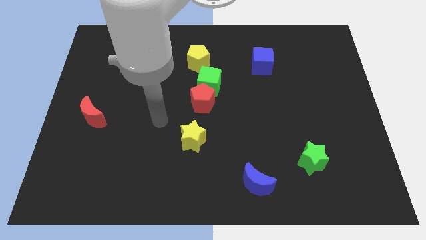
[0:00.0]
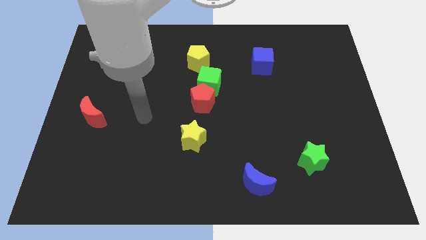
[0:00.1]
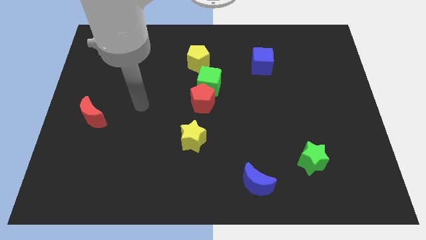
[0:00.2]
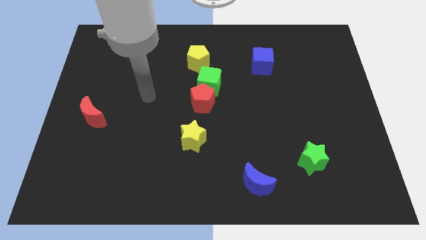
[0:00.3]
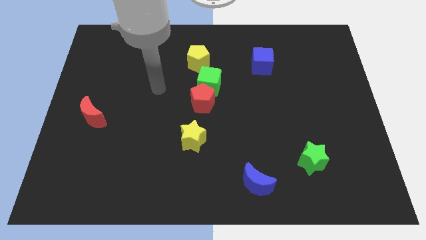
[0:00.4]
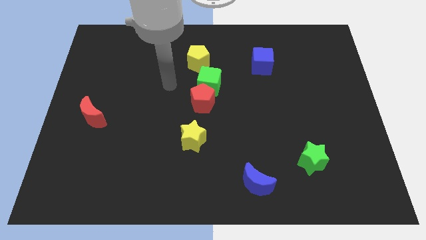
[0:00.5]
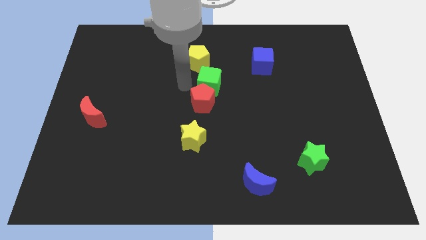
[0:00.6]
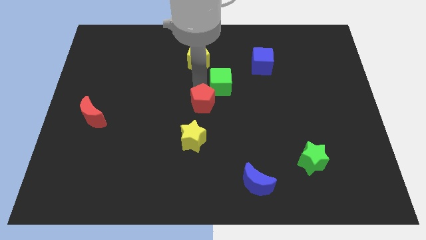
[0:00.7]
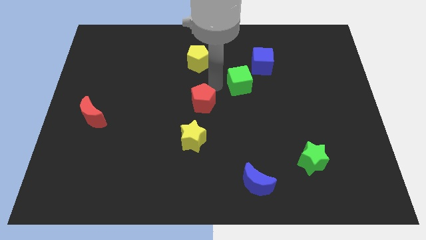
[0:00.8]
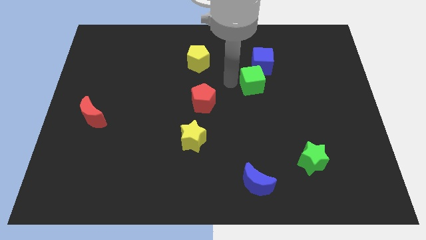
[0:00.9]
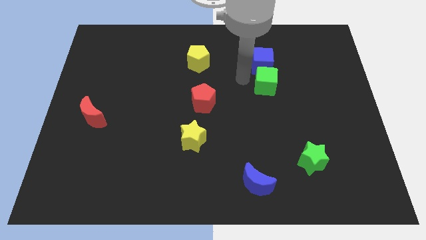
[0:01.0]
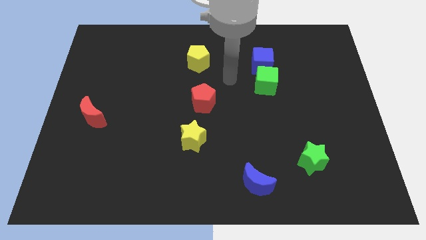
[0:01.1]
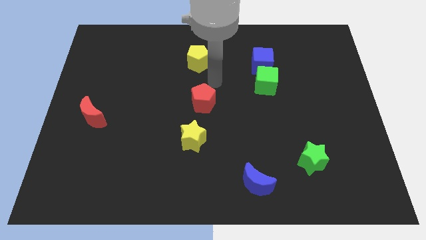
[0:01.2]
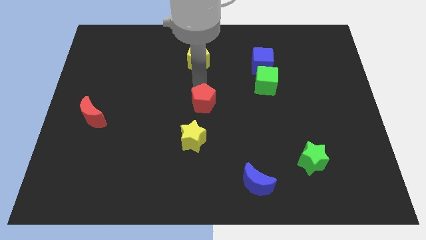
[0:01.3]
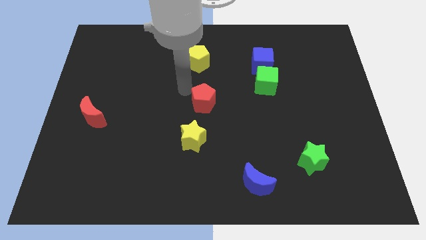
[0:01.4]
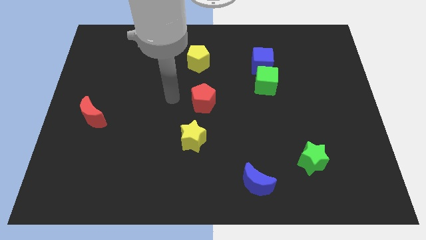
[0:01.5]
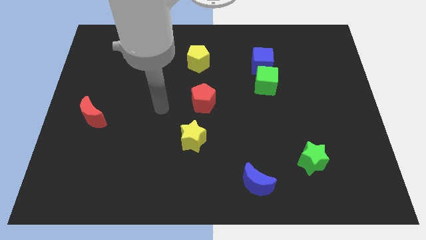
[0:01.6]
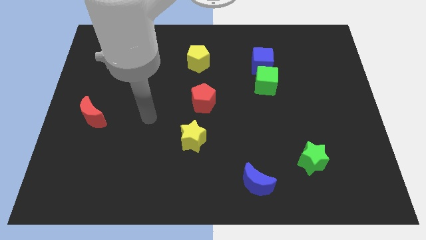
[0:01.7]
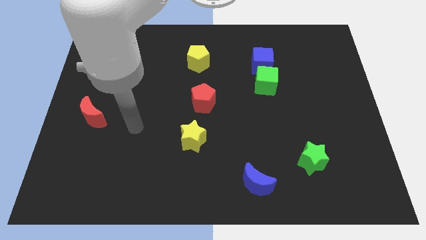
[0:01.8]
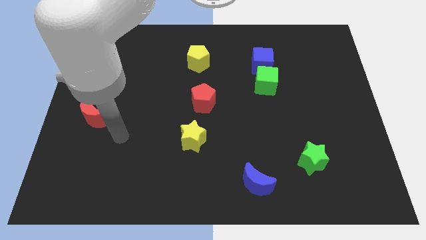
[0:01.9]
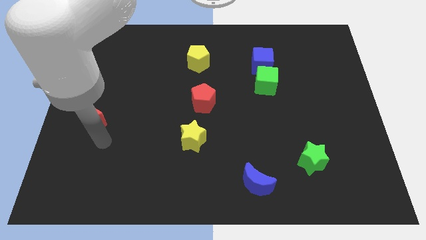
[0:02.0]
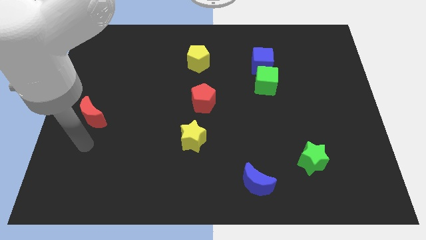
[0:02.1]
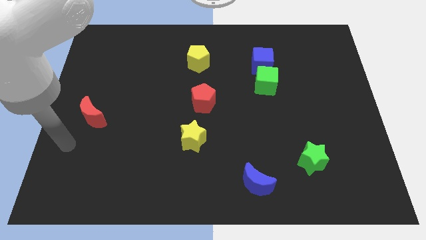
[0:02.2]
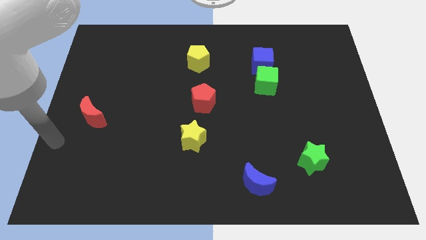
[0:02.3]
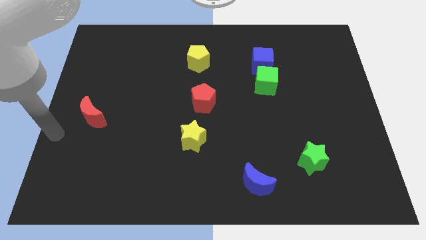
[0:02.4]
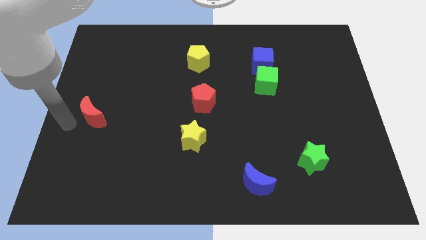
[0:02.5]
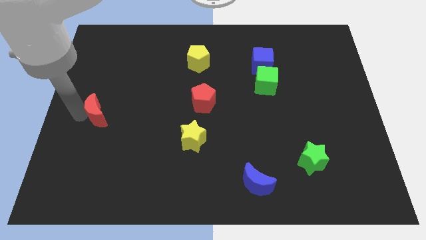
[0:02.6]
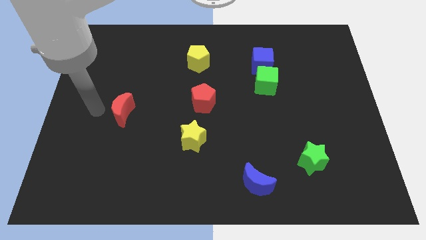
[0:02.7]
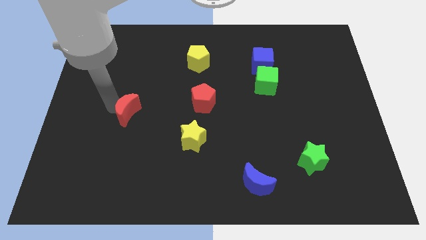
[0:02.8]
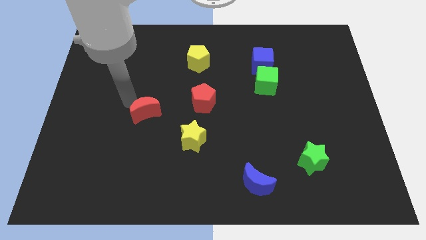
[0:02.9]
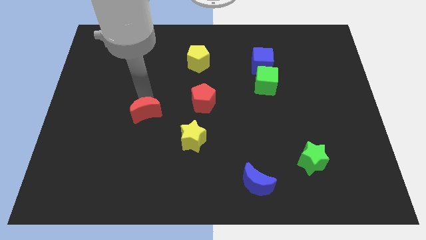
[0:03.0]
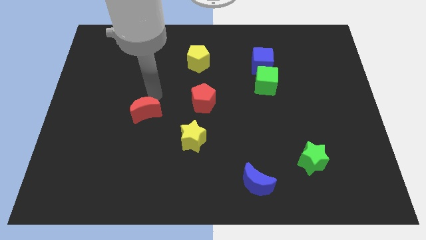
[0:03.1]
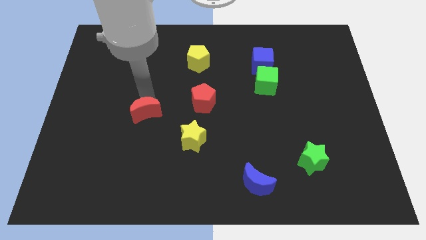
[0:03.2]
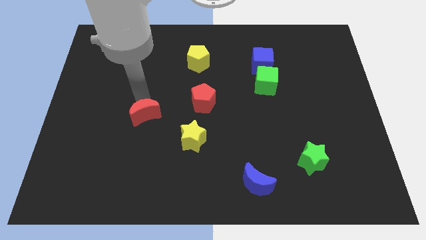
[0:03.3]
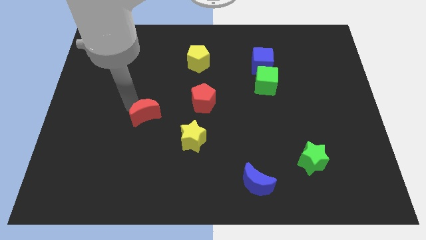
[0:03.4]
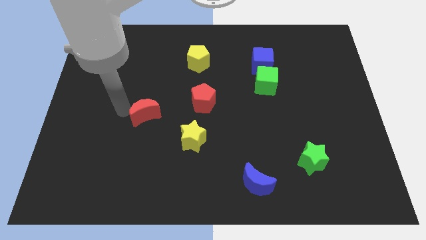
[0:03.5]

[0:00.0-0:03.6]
place the red blocks and the green cube in the diagonal row

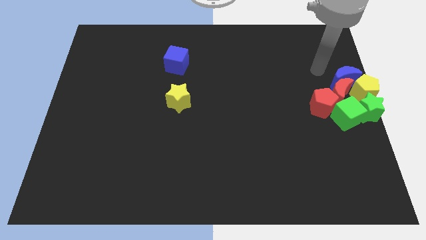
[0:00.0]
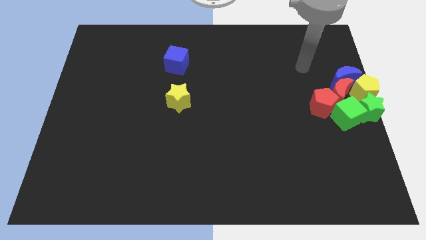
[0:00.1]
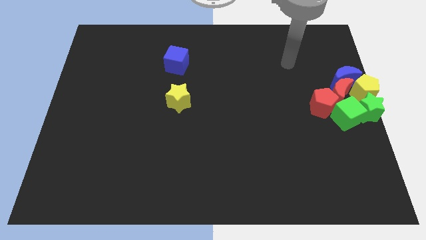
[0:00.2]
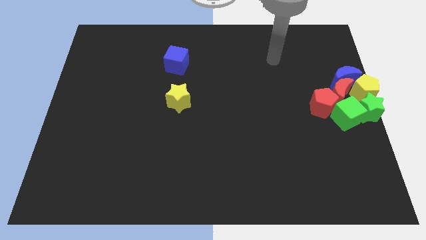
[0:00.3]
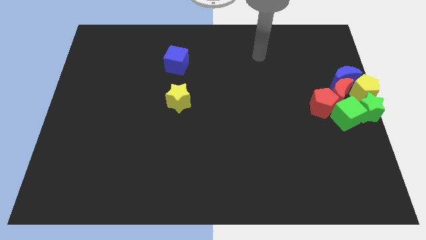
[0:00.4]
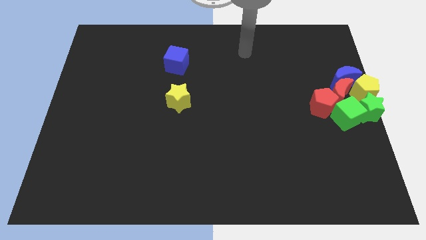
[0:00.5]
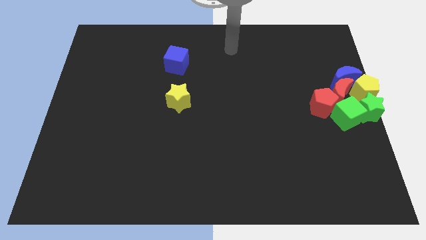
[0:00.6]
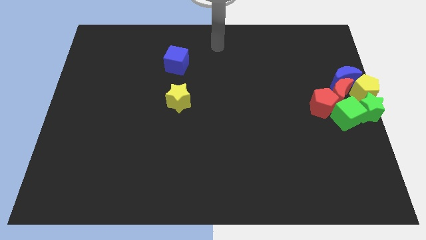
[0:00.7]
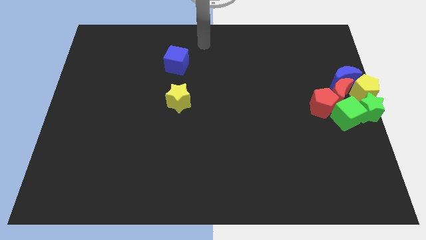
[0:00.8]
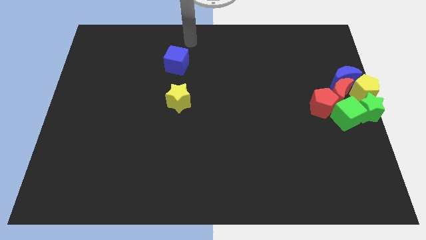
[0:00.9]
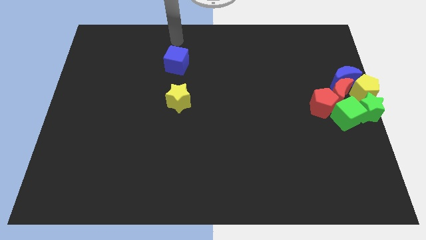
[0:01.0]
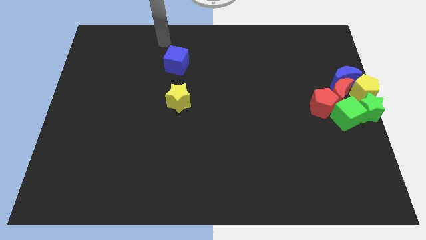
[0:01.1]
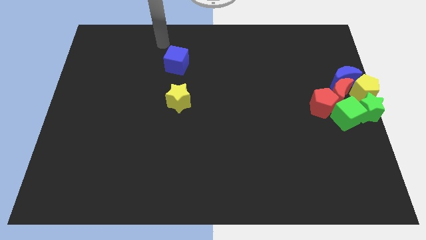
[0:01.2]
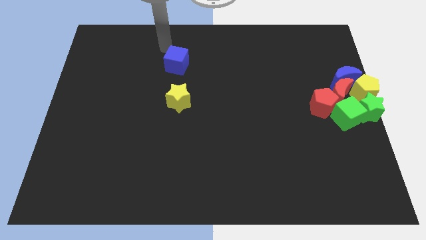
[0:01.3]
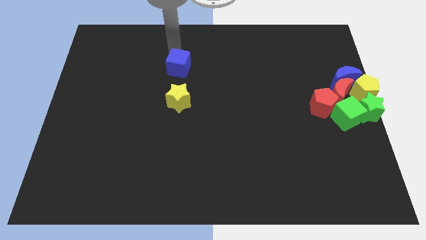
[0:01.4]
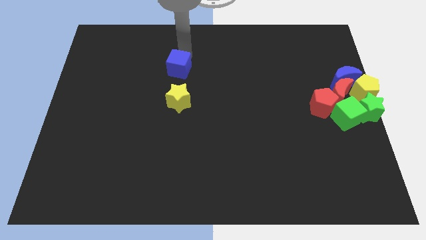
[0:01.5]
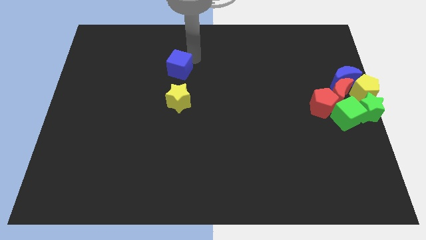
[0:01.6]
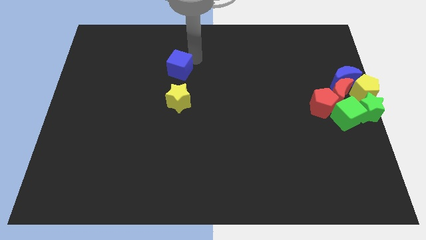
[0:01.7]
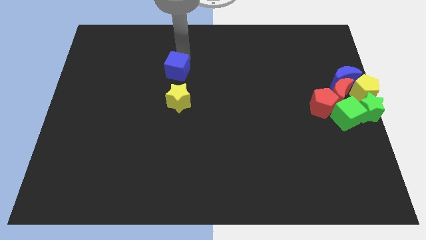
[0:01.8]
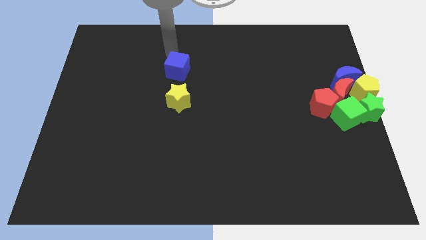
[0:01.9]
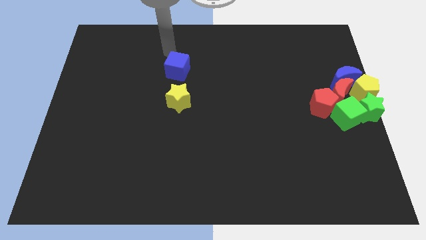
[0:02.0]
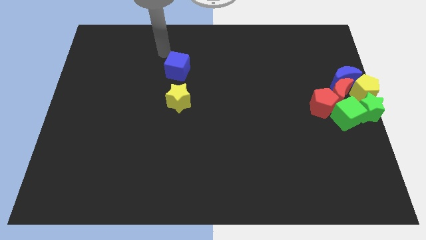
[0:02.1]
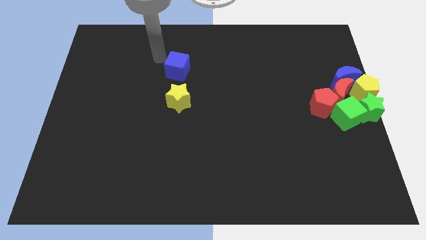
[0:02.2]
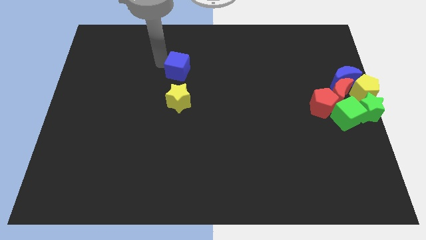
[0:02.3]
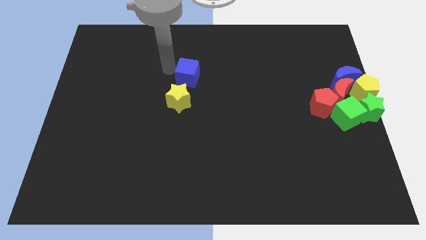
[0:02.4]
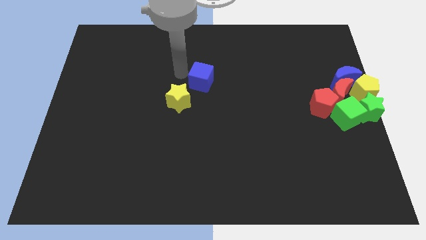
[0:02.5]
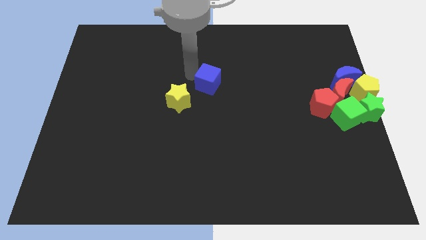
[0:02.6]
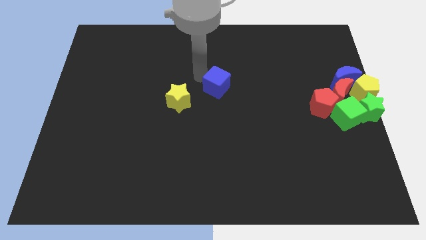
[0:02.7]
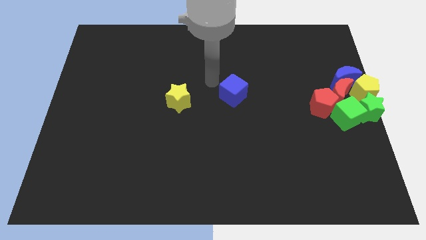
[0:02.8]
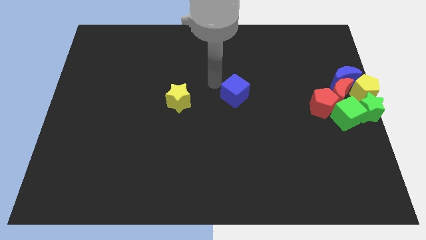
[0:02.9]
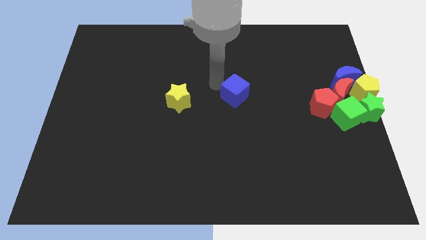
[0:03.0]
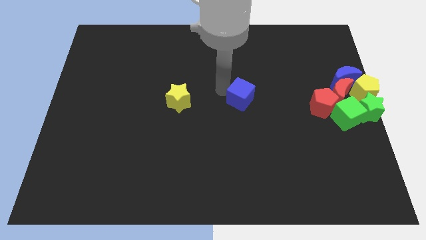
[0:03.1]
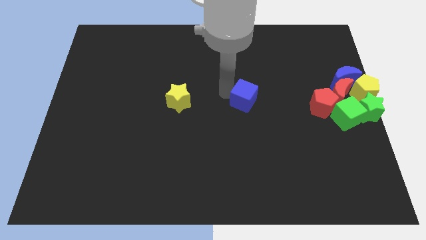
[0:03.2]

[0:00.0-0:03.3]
place the blue cube at right side of the yellow star

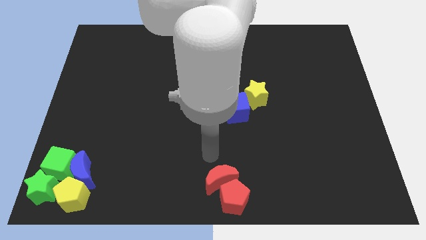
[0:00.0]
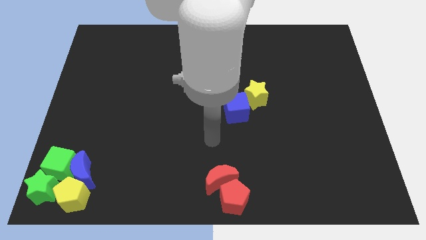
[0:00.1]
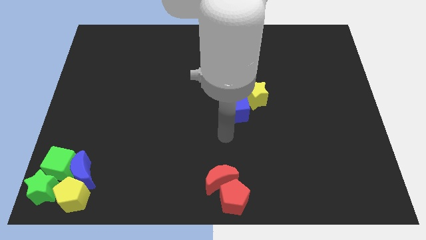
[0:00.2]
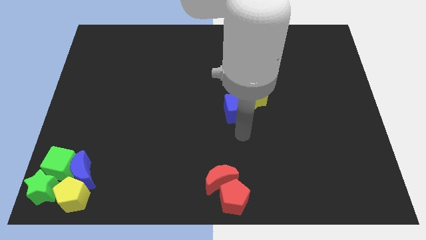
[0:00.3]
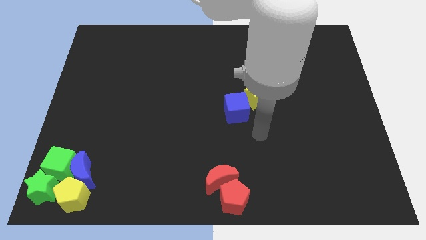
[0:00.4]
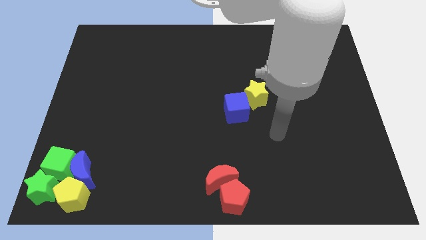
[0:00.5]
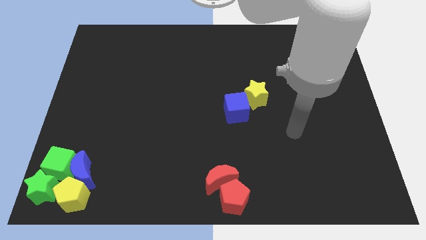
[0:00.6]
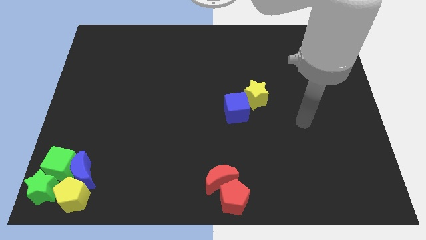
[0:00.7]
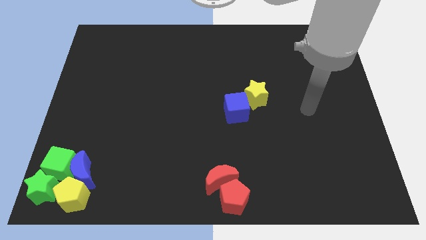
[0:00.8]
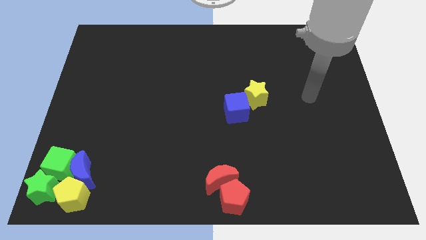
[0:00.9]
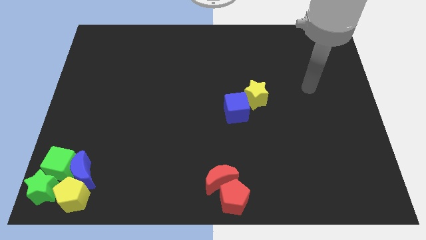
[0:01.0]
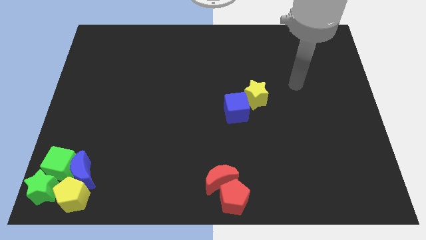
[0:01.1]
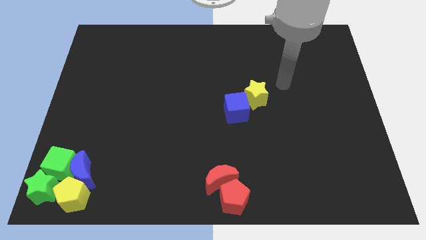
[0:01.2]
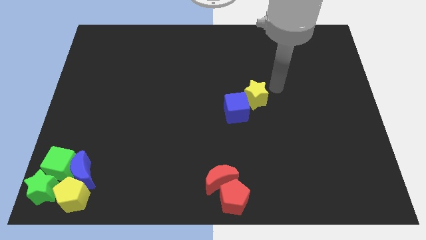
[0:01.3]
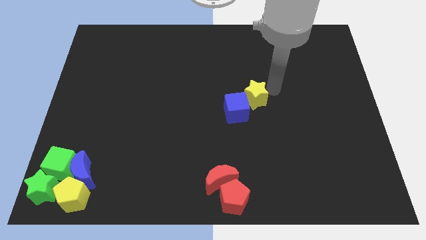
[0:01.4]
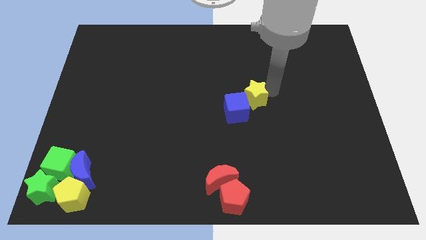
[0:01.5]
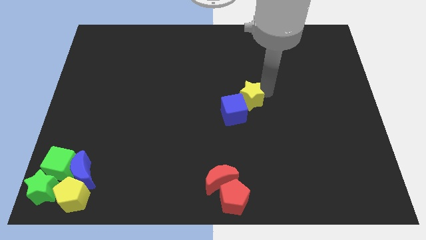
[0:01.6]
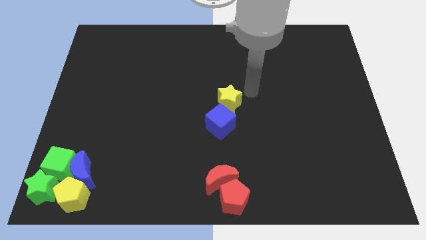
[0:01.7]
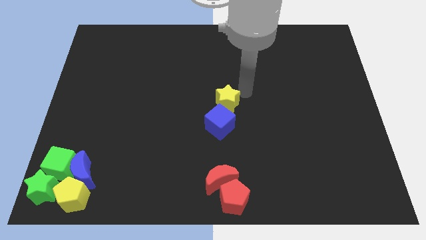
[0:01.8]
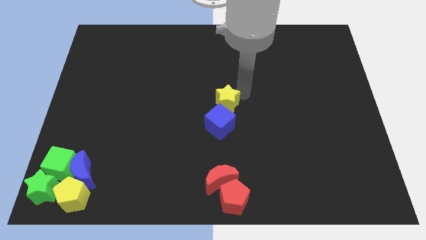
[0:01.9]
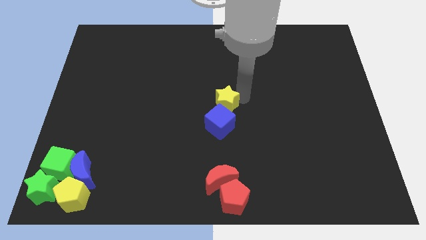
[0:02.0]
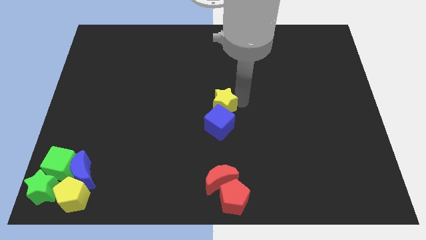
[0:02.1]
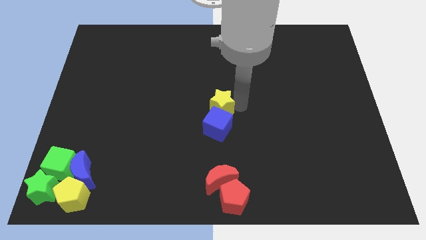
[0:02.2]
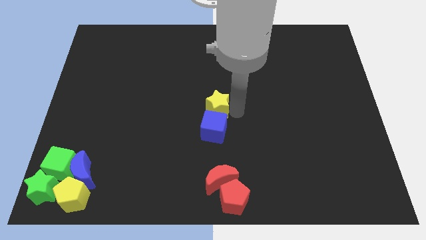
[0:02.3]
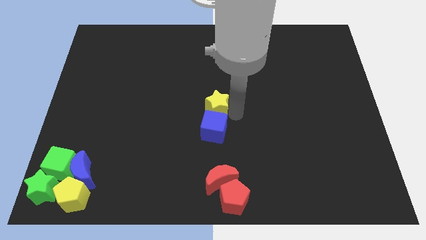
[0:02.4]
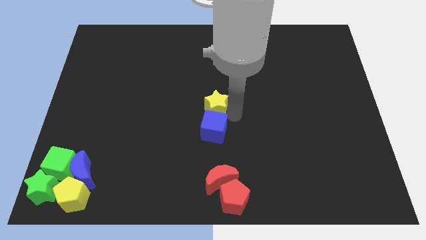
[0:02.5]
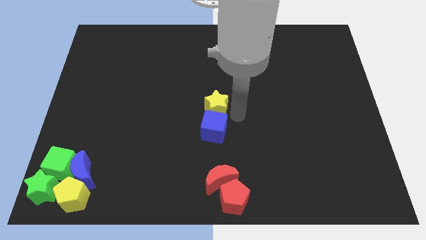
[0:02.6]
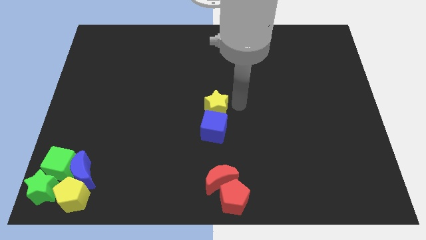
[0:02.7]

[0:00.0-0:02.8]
move the yellow star to the top of the blue cube
